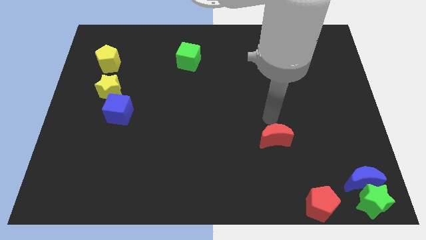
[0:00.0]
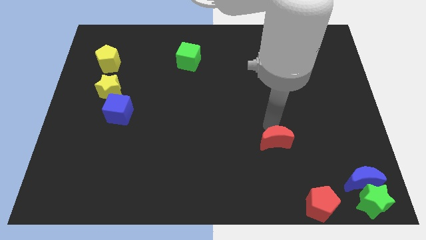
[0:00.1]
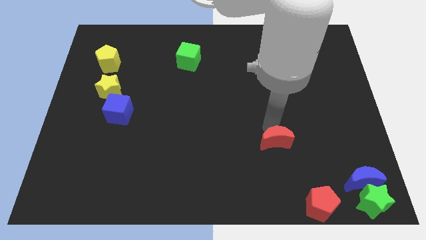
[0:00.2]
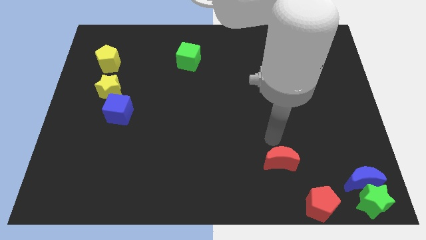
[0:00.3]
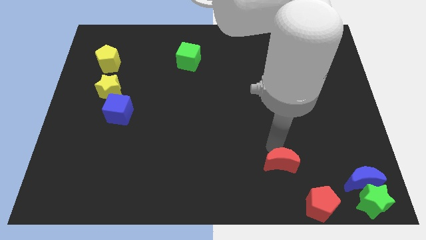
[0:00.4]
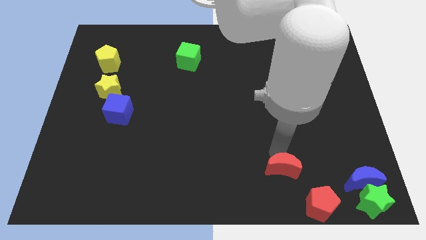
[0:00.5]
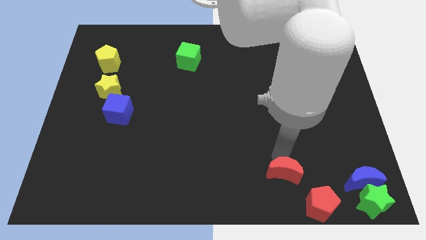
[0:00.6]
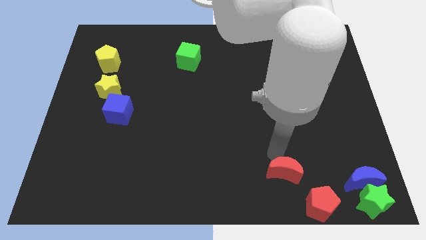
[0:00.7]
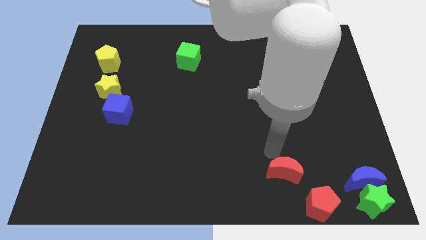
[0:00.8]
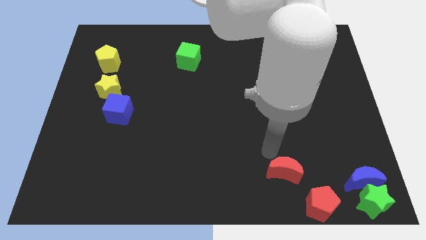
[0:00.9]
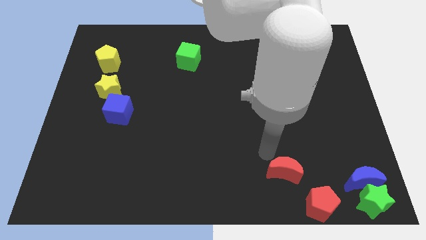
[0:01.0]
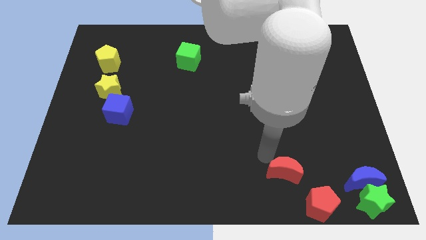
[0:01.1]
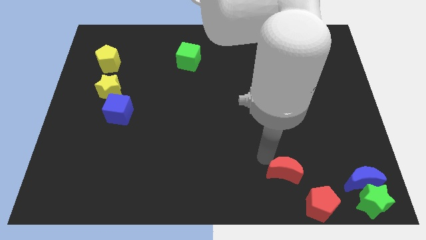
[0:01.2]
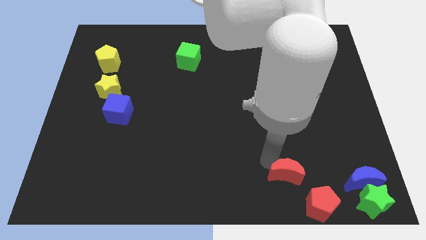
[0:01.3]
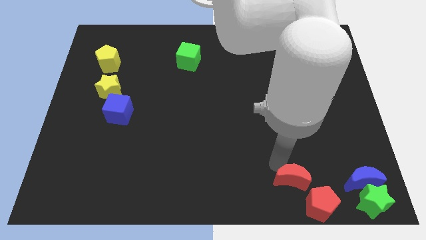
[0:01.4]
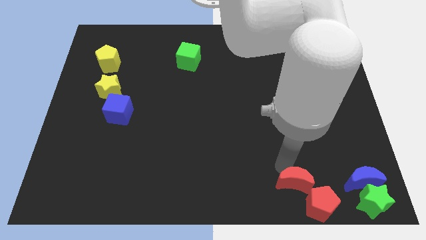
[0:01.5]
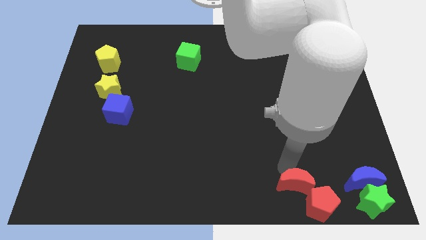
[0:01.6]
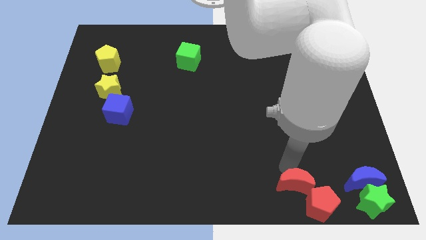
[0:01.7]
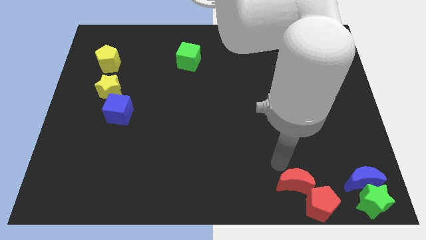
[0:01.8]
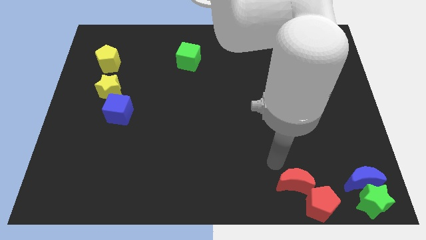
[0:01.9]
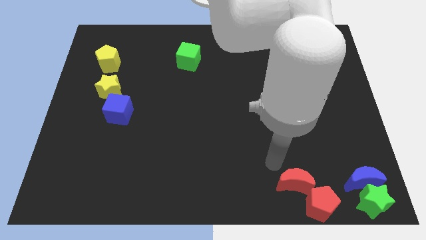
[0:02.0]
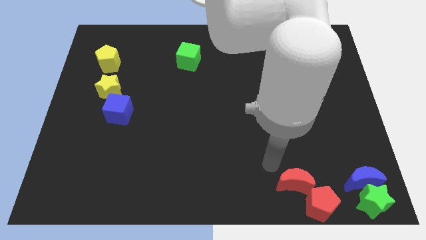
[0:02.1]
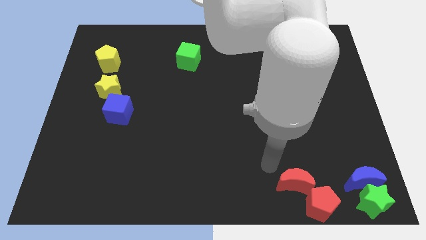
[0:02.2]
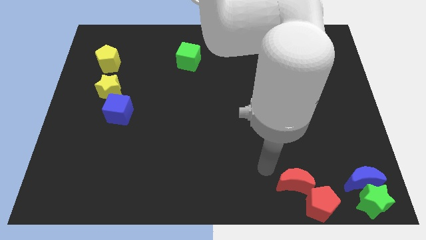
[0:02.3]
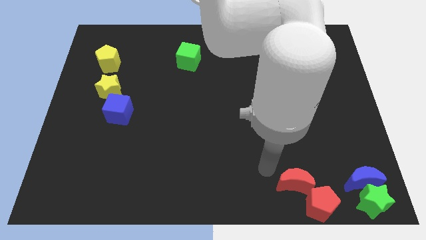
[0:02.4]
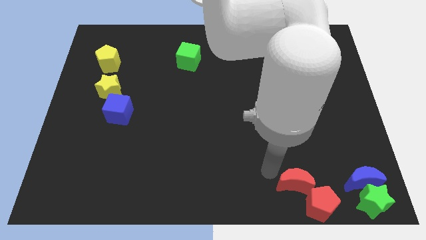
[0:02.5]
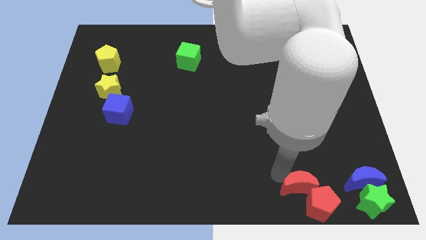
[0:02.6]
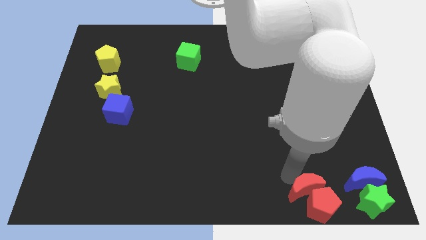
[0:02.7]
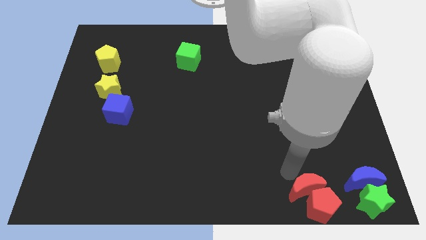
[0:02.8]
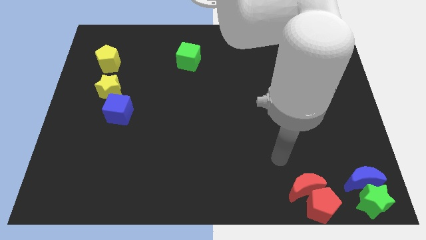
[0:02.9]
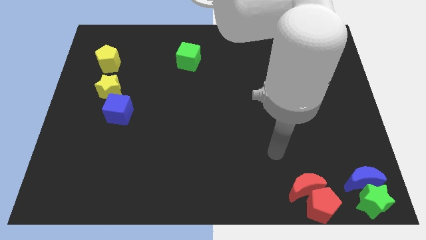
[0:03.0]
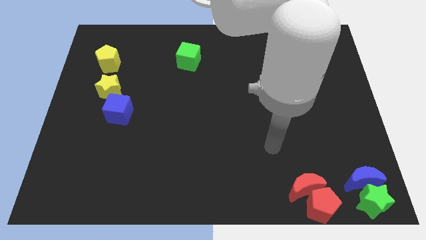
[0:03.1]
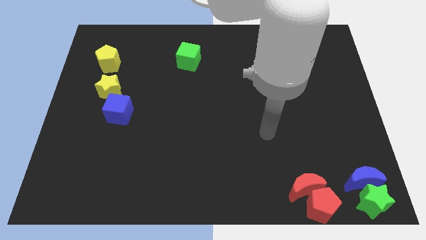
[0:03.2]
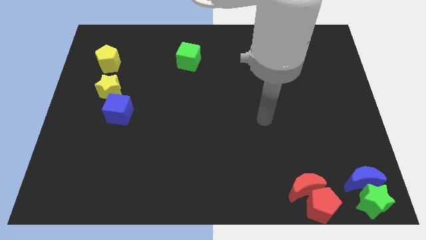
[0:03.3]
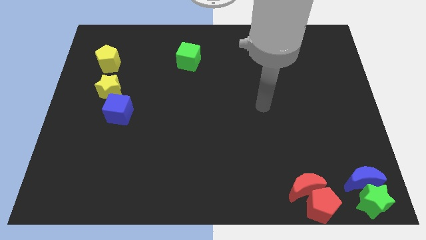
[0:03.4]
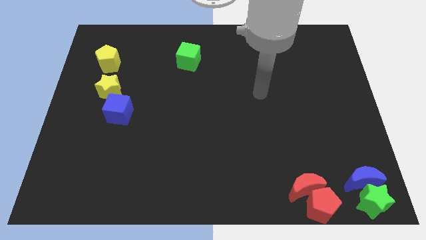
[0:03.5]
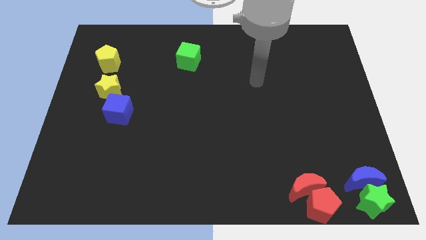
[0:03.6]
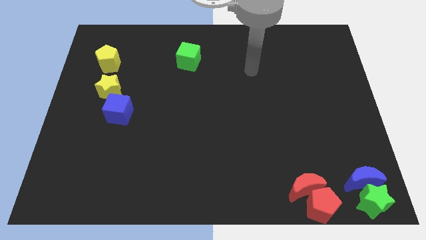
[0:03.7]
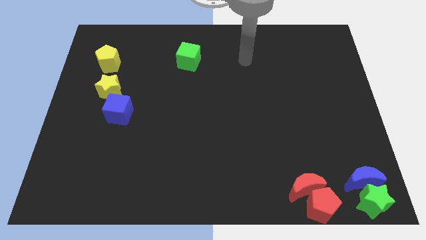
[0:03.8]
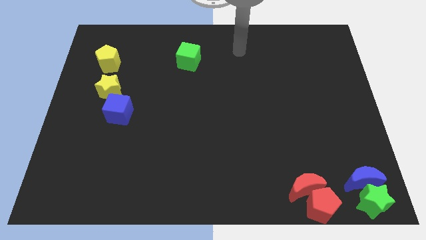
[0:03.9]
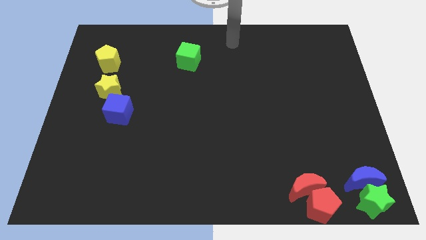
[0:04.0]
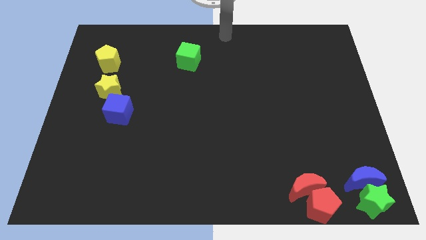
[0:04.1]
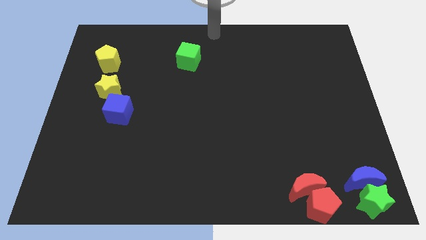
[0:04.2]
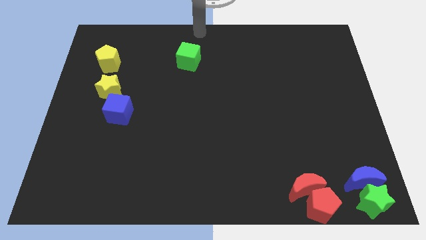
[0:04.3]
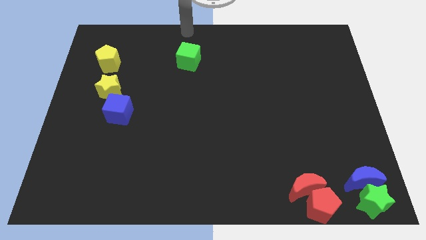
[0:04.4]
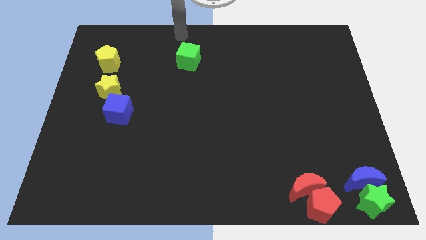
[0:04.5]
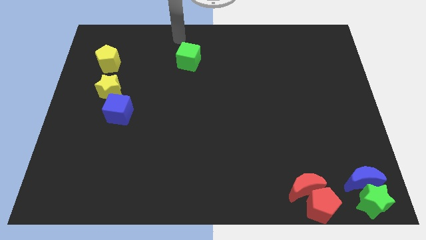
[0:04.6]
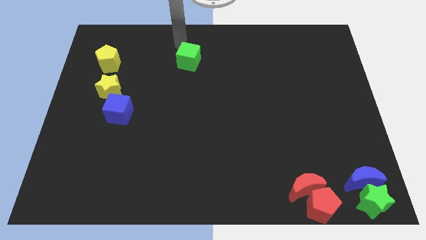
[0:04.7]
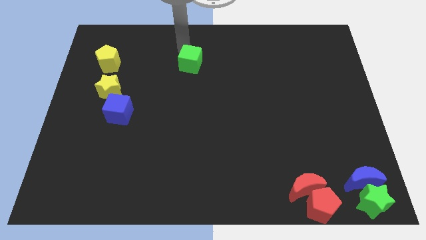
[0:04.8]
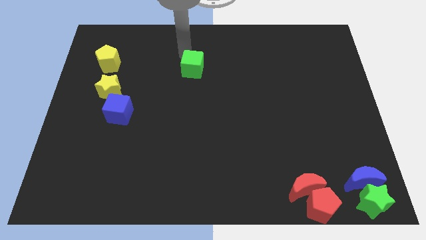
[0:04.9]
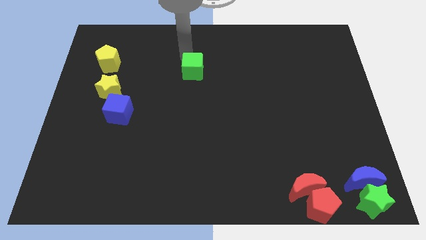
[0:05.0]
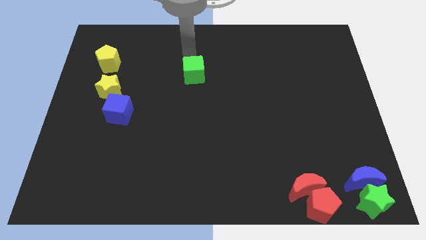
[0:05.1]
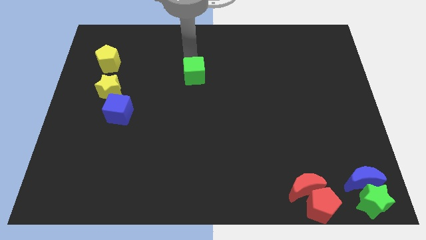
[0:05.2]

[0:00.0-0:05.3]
place the red crescent close to red pentagon

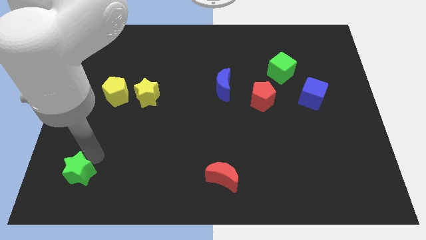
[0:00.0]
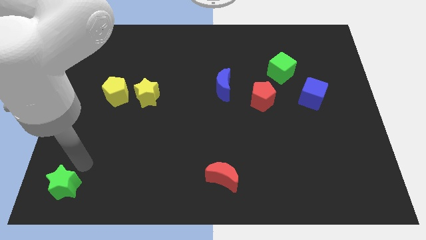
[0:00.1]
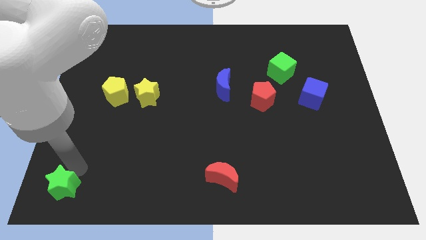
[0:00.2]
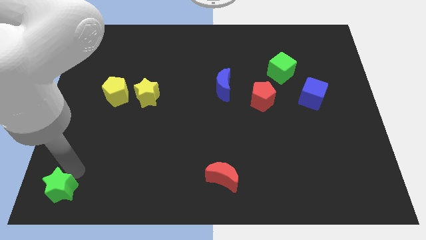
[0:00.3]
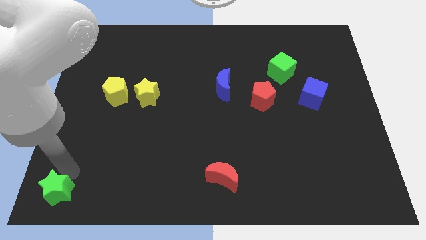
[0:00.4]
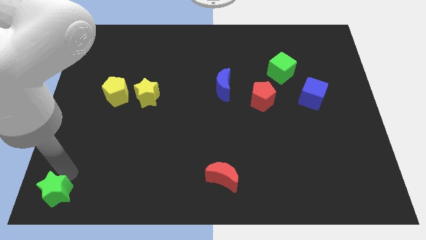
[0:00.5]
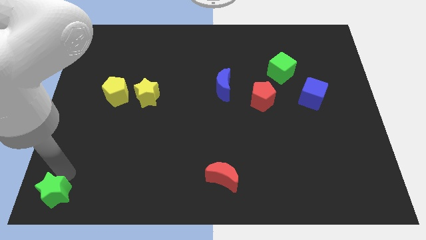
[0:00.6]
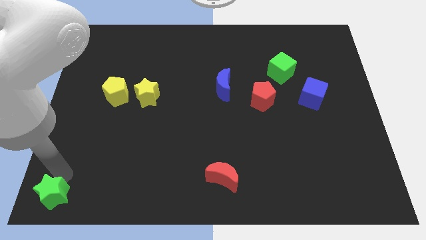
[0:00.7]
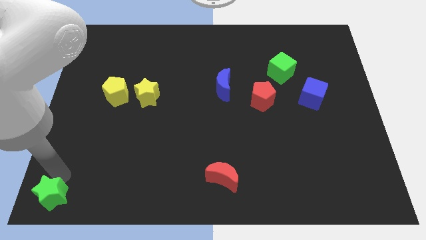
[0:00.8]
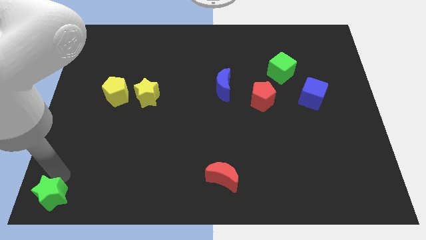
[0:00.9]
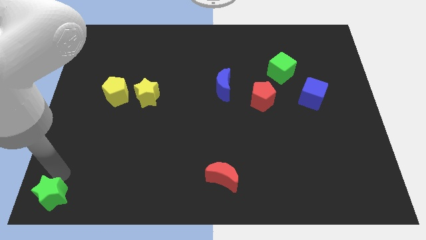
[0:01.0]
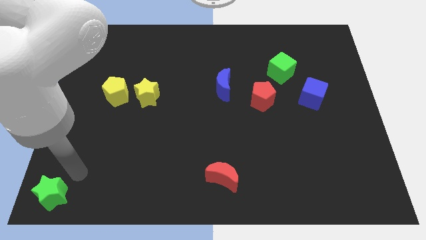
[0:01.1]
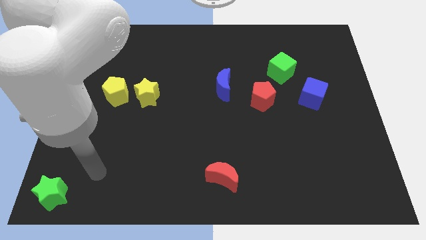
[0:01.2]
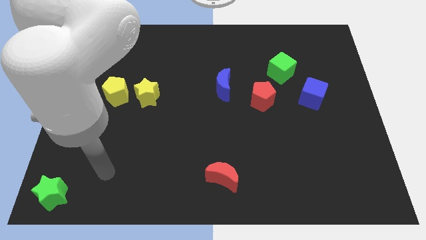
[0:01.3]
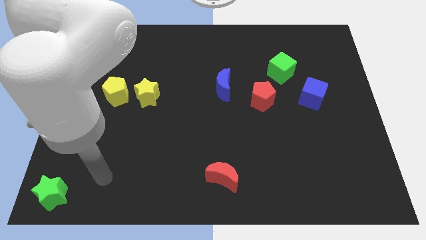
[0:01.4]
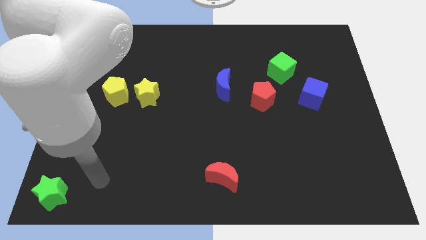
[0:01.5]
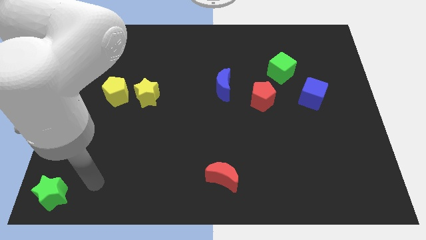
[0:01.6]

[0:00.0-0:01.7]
push the green star to the bottom left corner of the board

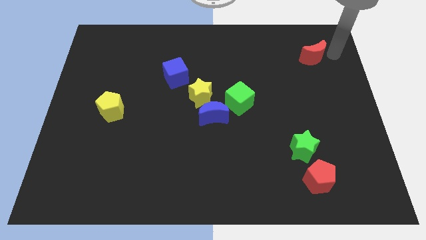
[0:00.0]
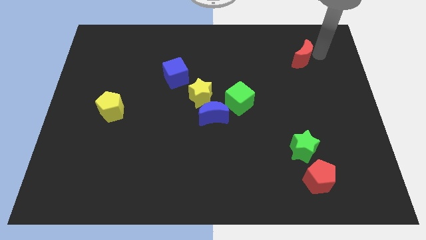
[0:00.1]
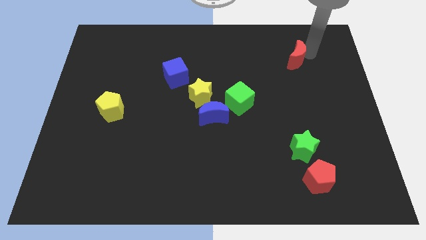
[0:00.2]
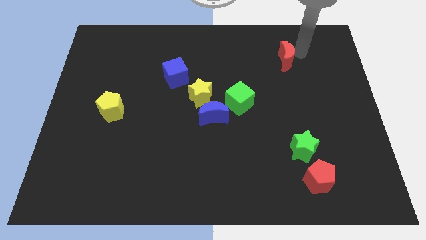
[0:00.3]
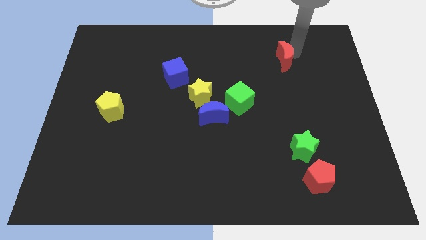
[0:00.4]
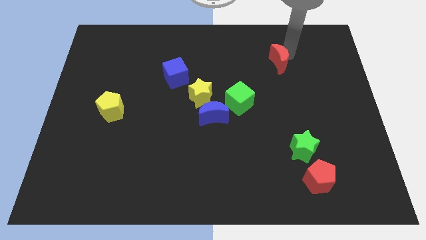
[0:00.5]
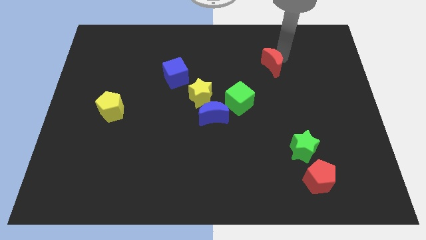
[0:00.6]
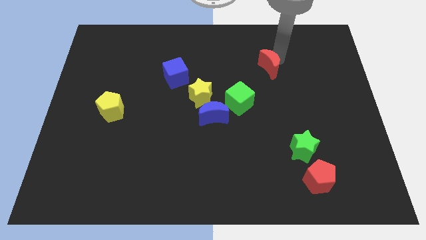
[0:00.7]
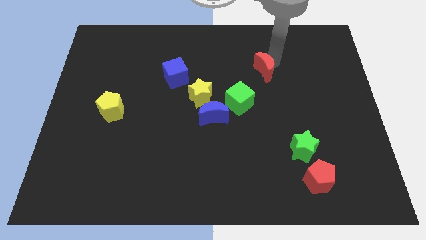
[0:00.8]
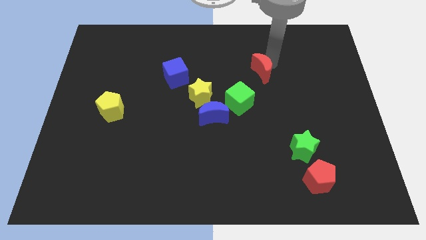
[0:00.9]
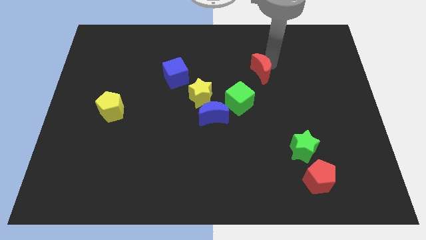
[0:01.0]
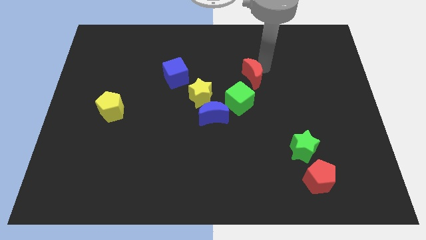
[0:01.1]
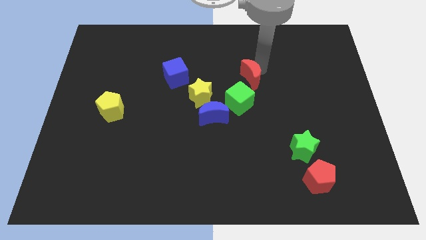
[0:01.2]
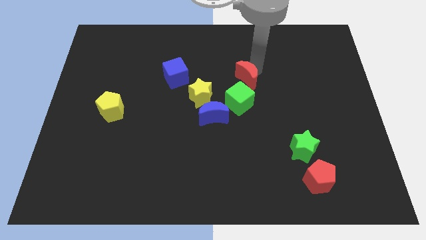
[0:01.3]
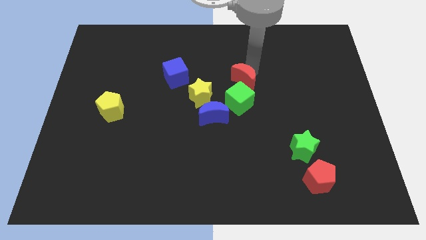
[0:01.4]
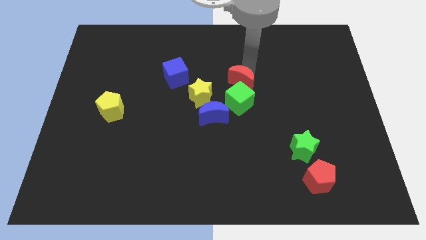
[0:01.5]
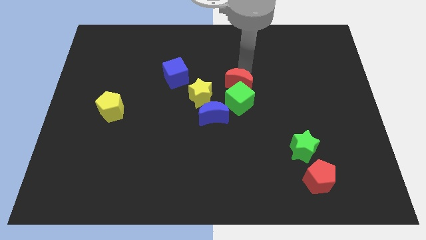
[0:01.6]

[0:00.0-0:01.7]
push the red crescent above the green cube
